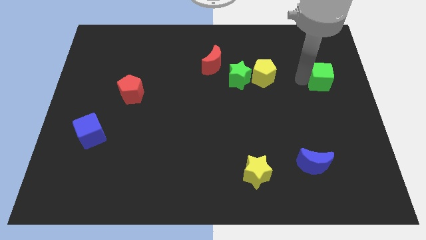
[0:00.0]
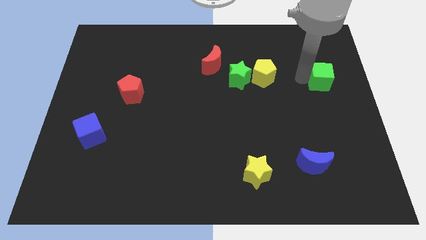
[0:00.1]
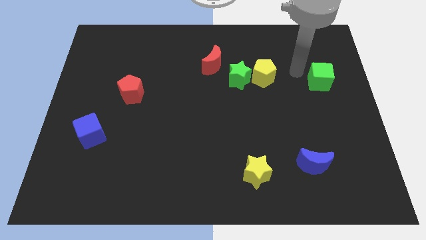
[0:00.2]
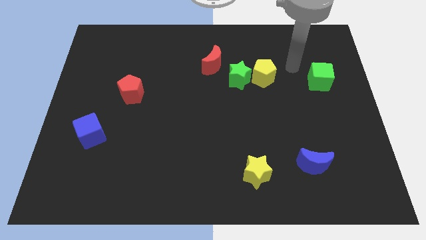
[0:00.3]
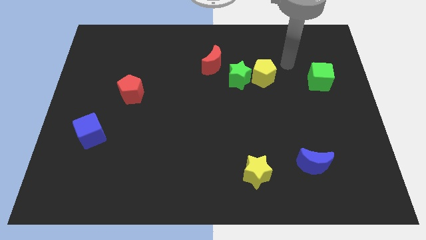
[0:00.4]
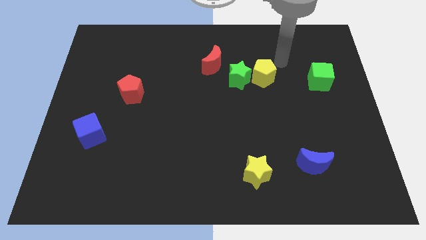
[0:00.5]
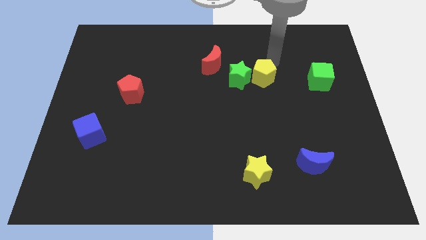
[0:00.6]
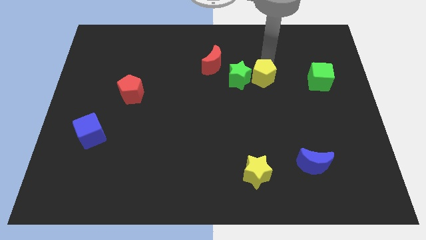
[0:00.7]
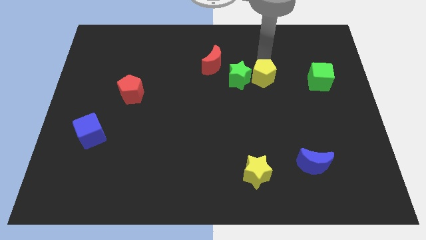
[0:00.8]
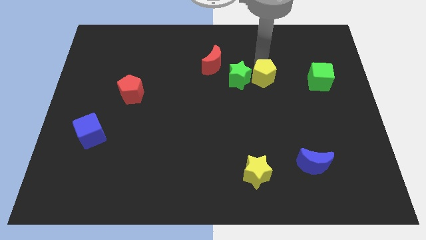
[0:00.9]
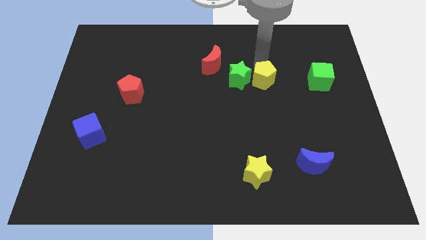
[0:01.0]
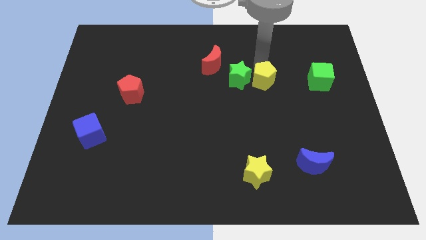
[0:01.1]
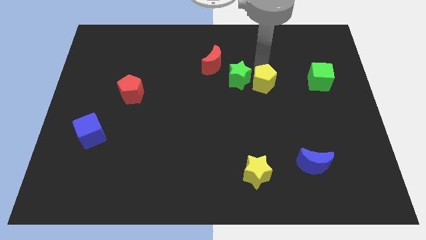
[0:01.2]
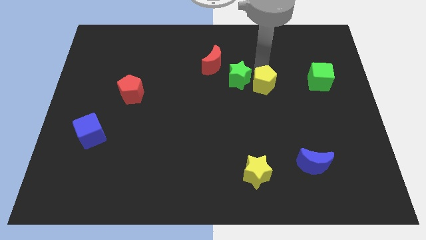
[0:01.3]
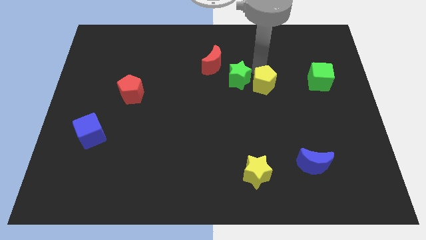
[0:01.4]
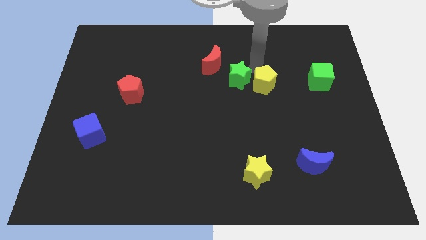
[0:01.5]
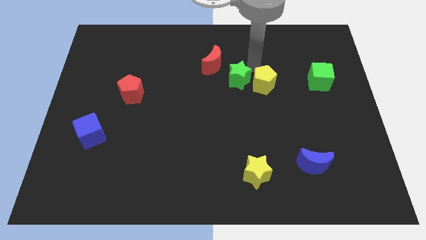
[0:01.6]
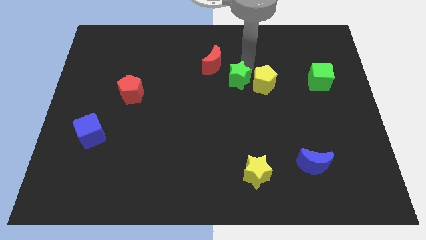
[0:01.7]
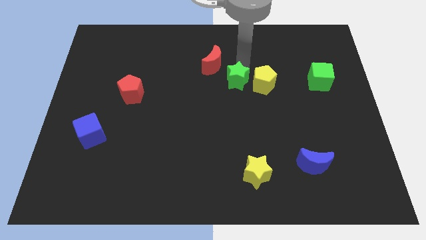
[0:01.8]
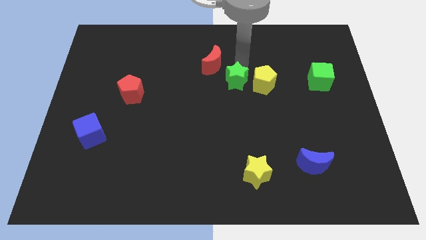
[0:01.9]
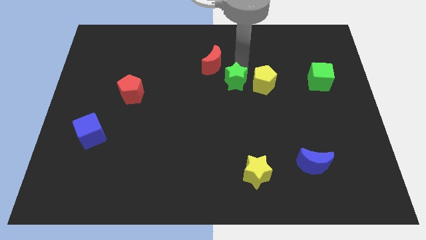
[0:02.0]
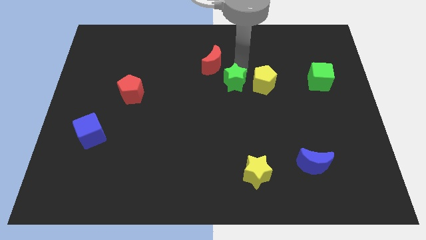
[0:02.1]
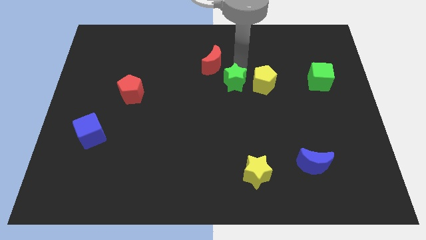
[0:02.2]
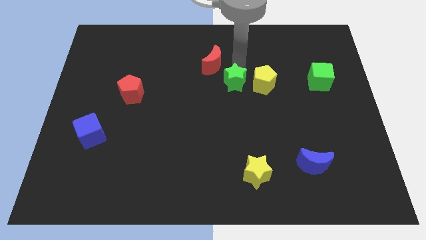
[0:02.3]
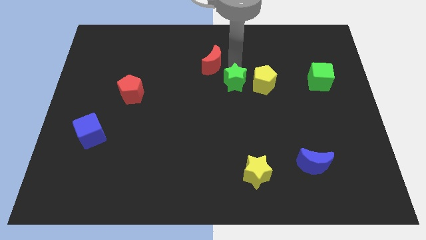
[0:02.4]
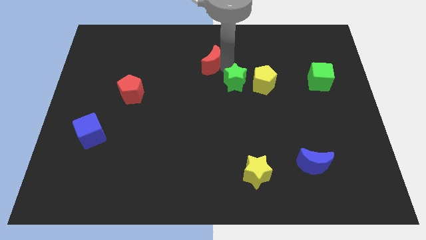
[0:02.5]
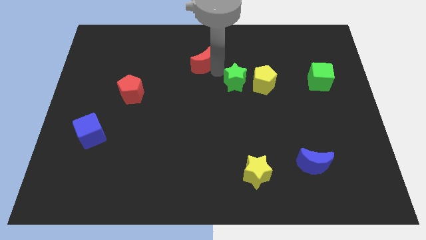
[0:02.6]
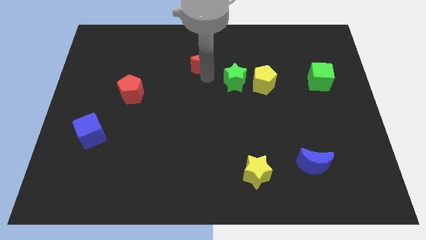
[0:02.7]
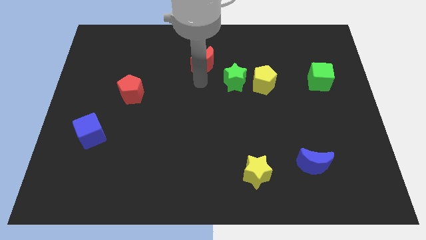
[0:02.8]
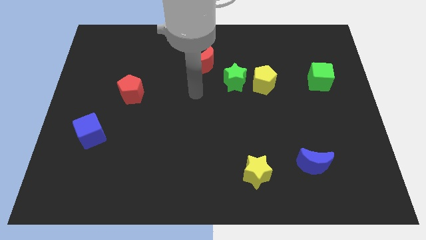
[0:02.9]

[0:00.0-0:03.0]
adjust the yellow pentagon and green star

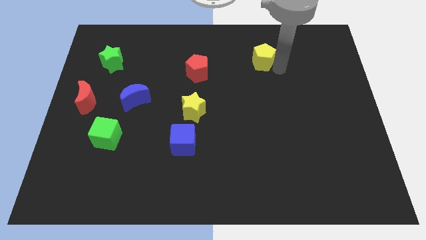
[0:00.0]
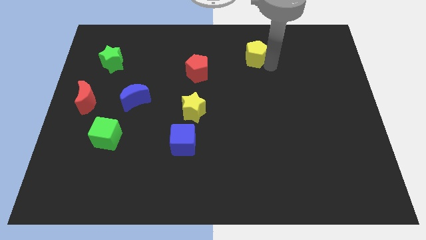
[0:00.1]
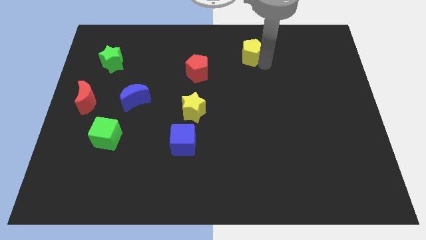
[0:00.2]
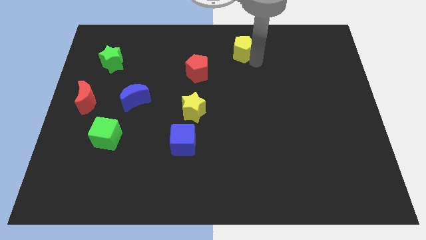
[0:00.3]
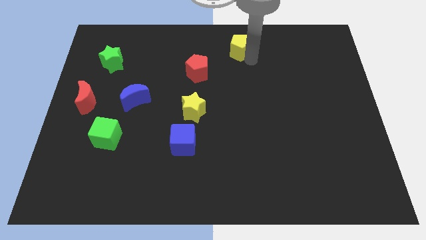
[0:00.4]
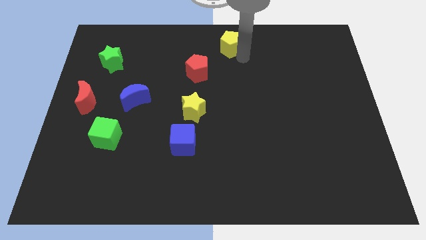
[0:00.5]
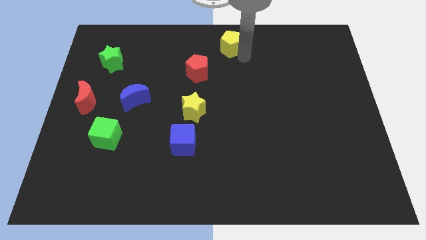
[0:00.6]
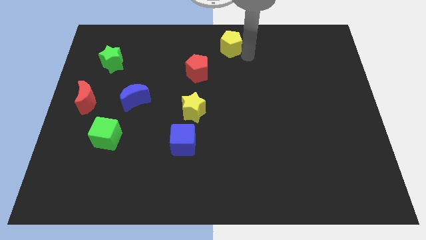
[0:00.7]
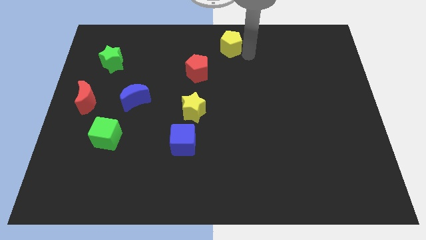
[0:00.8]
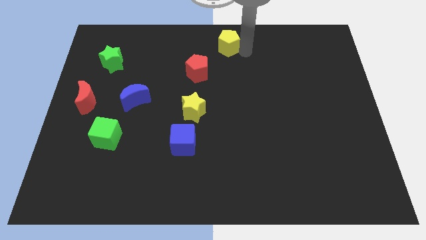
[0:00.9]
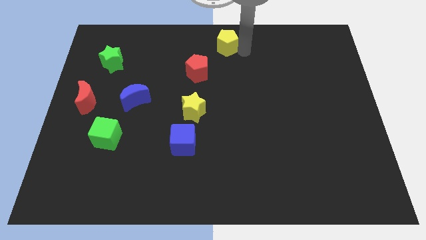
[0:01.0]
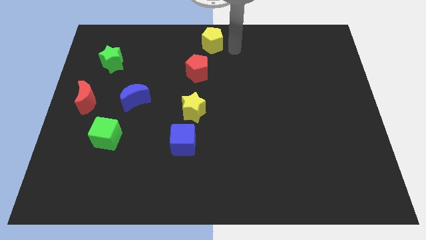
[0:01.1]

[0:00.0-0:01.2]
place the yellow pentagon at the top center of the board

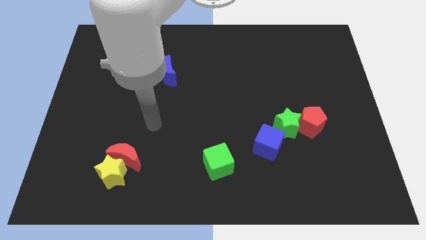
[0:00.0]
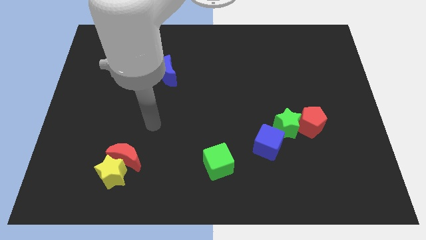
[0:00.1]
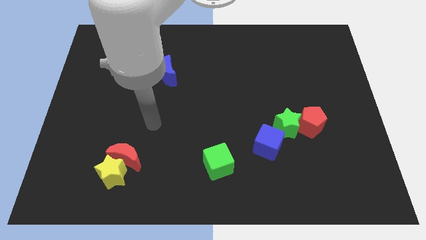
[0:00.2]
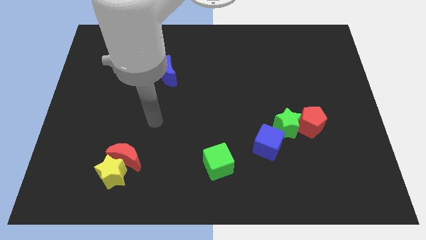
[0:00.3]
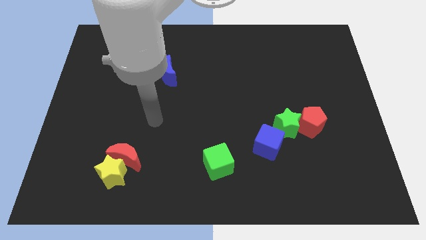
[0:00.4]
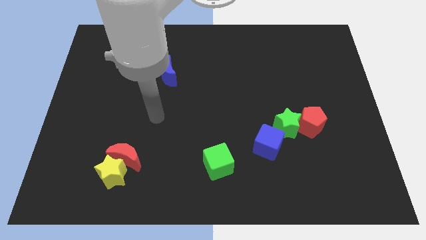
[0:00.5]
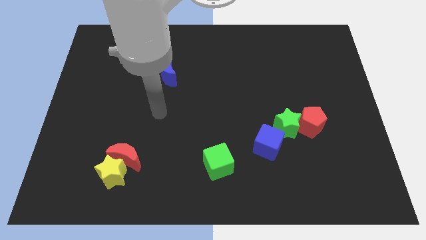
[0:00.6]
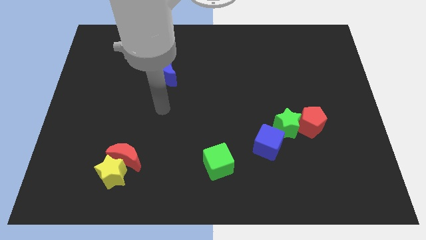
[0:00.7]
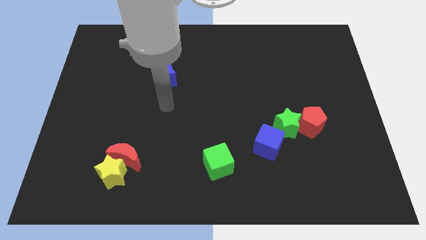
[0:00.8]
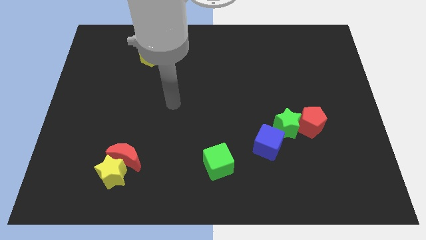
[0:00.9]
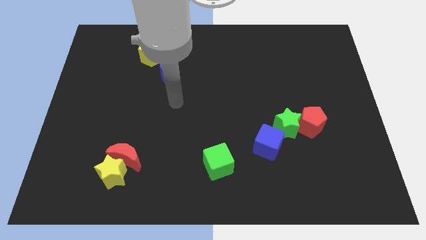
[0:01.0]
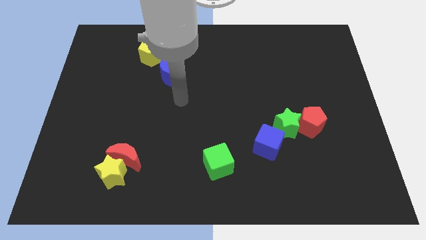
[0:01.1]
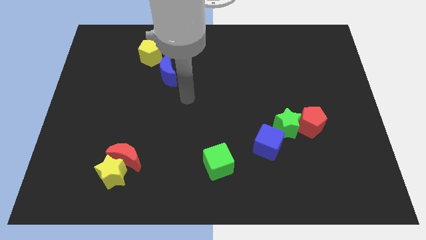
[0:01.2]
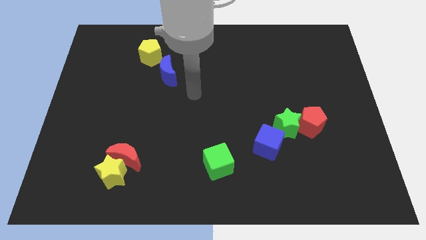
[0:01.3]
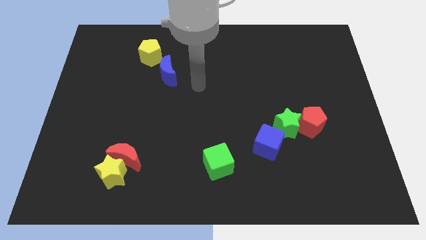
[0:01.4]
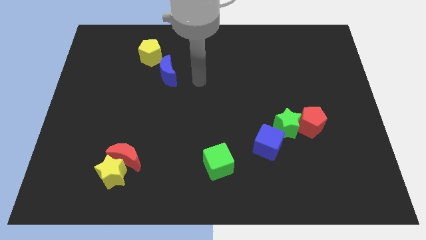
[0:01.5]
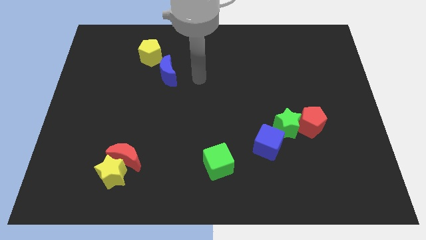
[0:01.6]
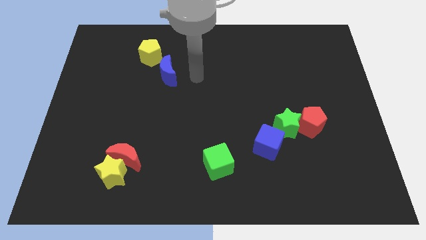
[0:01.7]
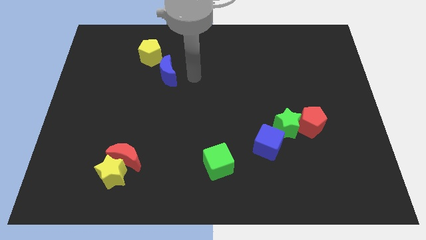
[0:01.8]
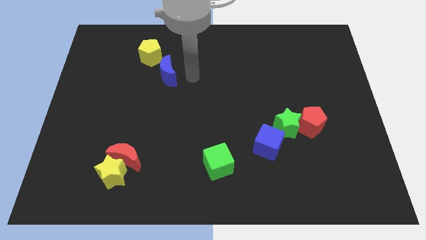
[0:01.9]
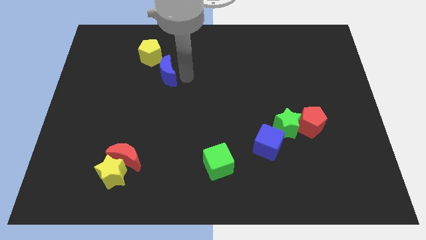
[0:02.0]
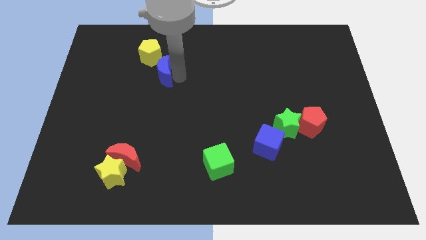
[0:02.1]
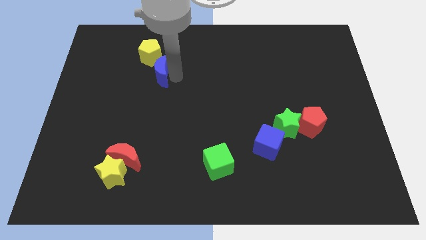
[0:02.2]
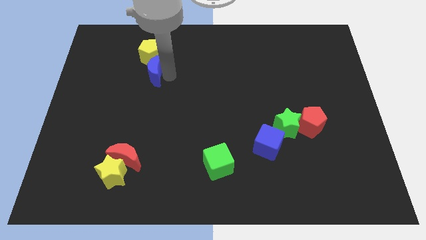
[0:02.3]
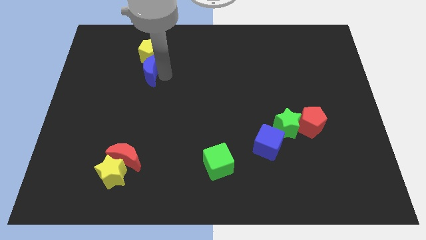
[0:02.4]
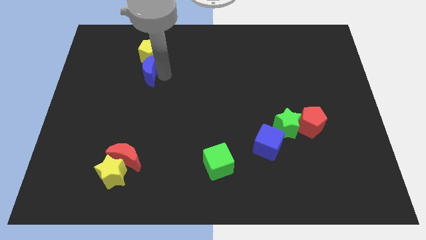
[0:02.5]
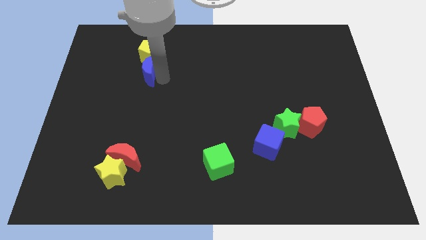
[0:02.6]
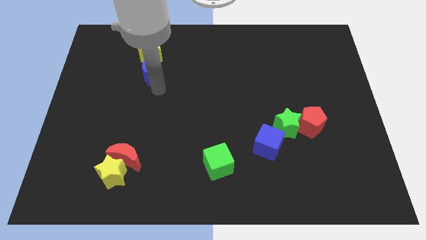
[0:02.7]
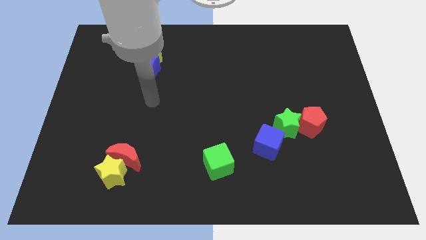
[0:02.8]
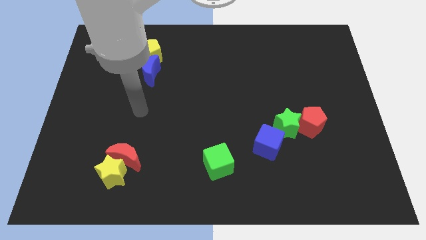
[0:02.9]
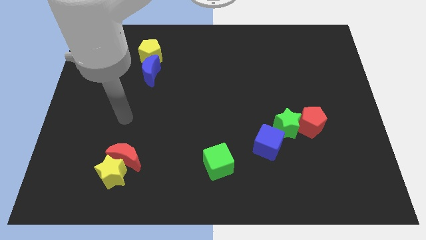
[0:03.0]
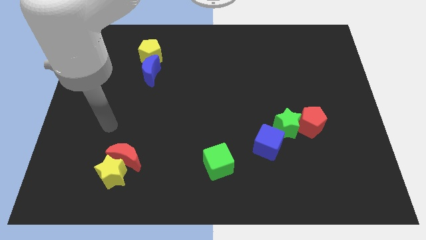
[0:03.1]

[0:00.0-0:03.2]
move the blue crescent slightly to the bottom of the yellow pentagon

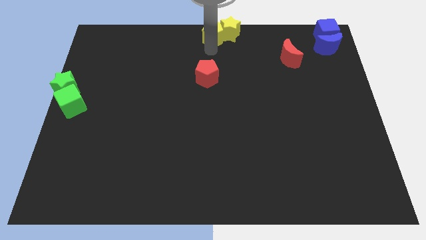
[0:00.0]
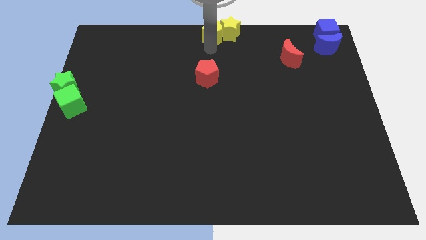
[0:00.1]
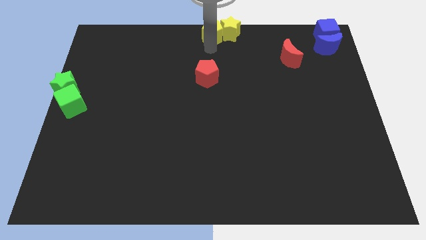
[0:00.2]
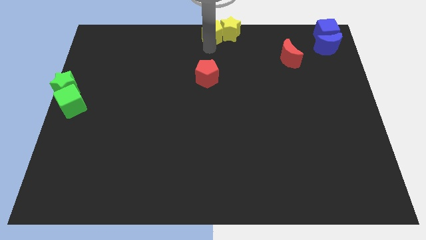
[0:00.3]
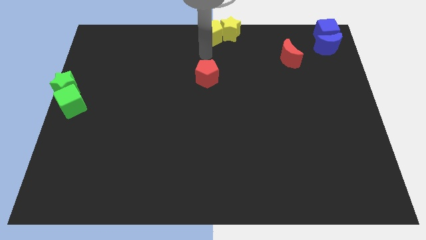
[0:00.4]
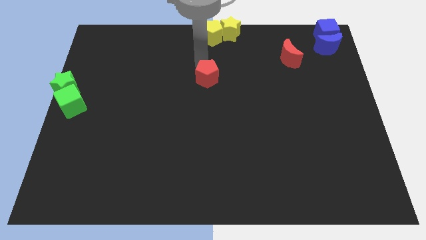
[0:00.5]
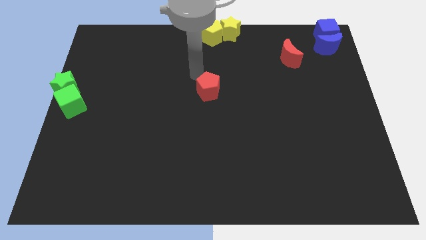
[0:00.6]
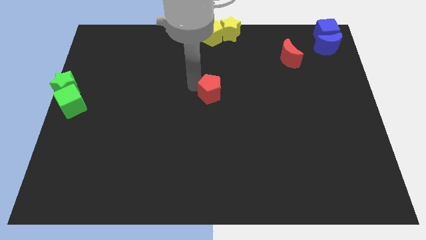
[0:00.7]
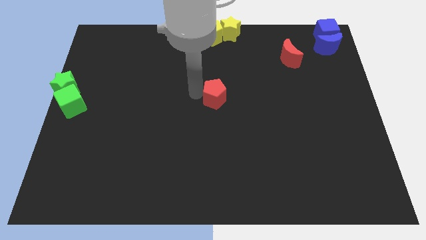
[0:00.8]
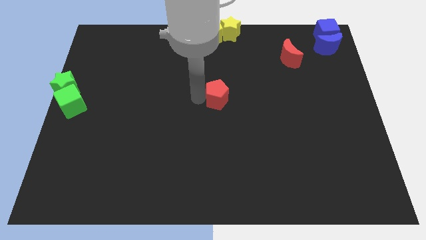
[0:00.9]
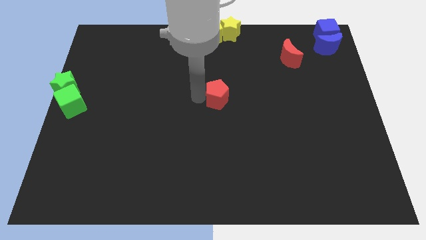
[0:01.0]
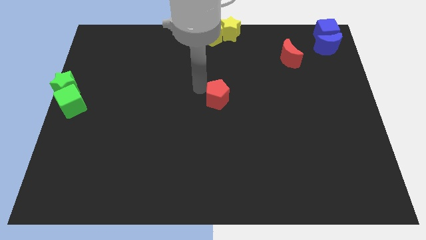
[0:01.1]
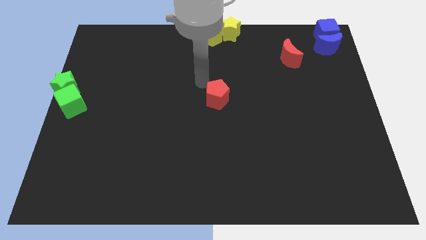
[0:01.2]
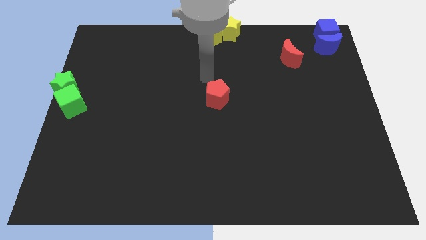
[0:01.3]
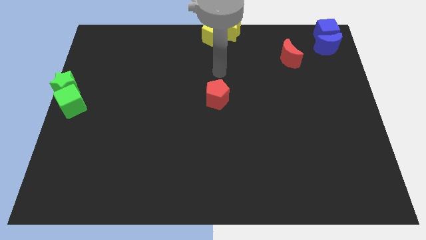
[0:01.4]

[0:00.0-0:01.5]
slightly move the red pentagon down

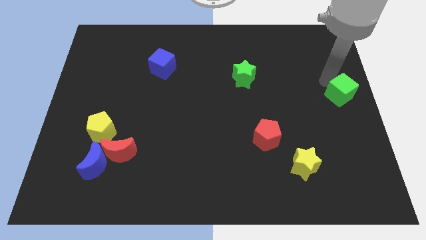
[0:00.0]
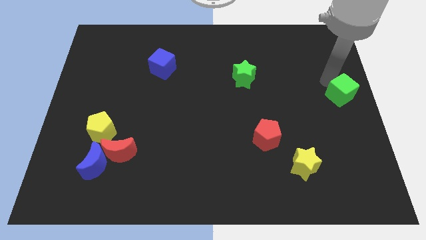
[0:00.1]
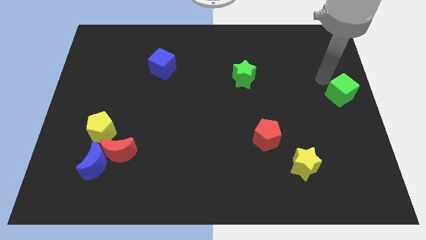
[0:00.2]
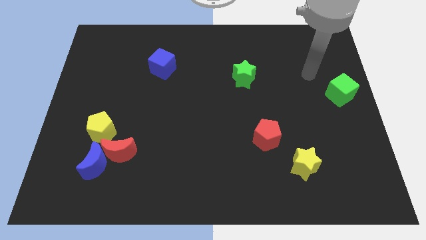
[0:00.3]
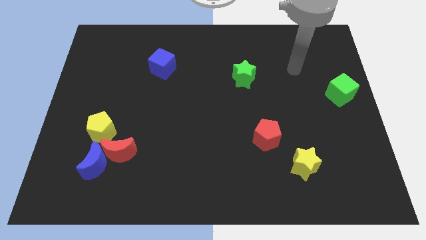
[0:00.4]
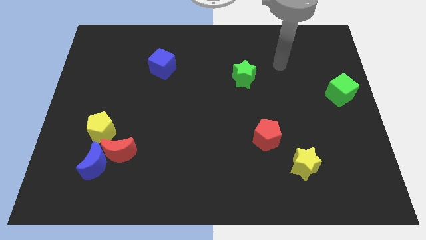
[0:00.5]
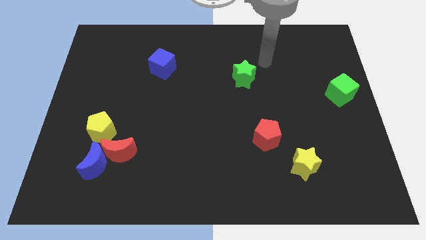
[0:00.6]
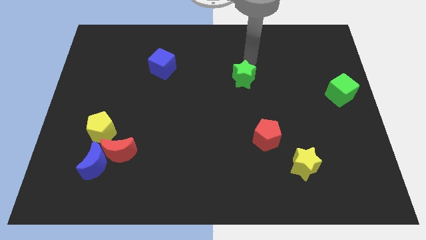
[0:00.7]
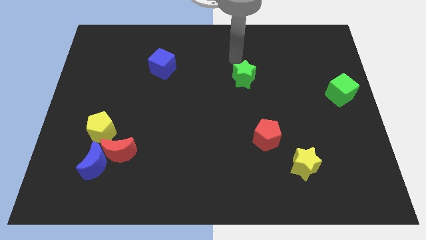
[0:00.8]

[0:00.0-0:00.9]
place your arm to the top of green star
